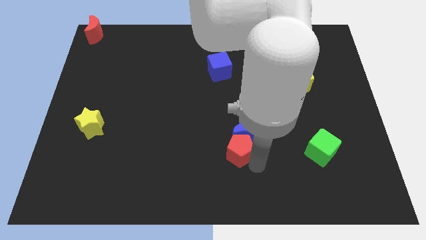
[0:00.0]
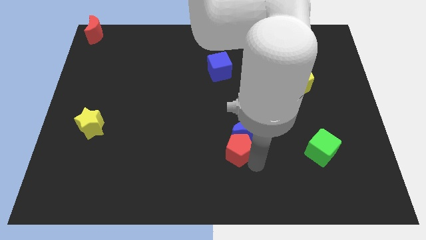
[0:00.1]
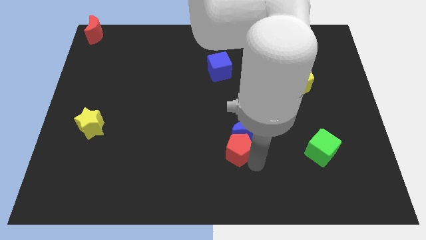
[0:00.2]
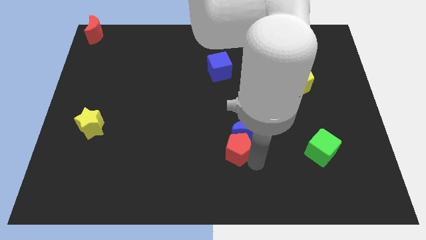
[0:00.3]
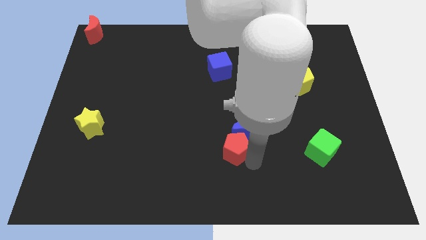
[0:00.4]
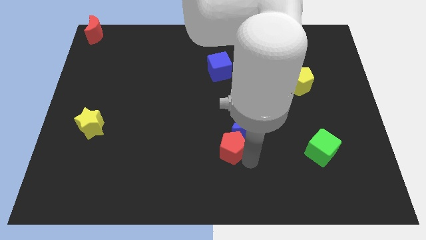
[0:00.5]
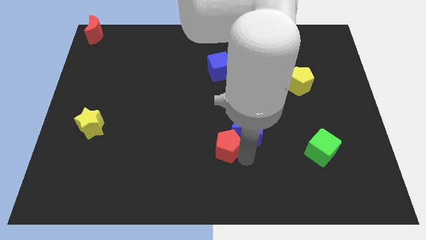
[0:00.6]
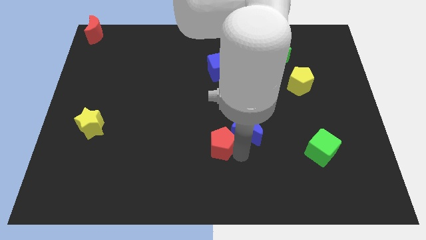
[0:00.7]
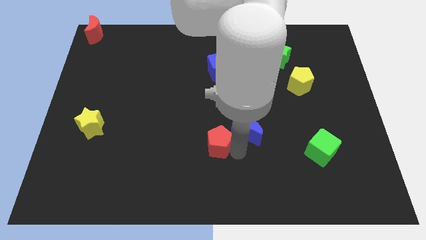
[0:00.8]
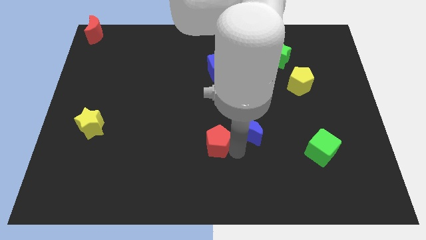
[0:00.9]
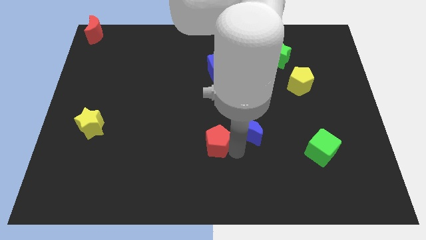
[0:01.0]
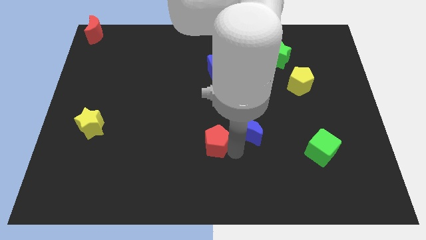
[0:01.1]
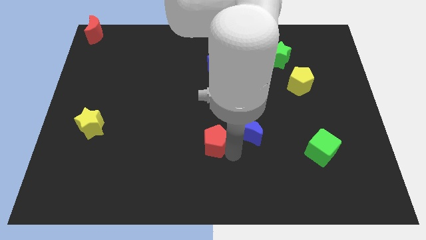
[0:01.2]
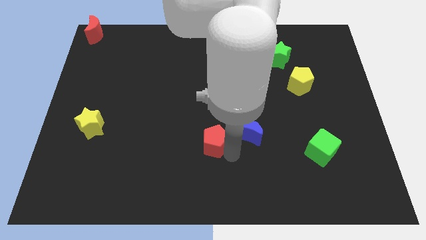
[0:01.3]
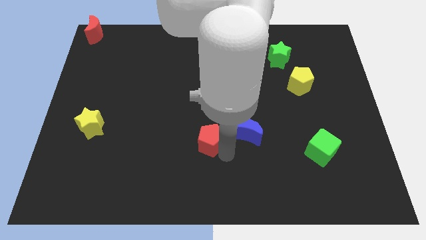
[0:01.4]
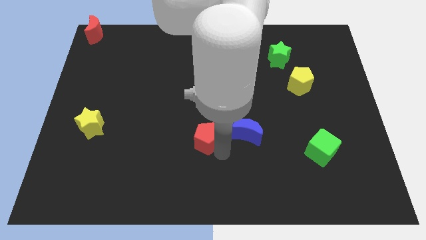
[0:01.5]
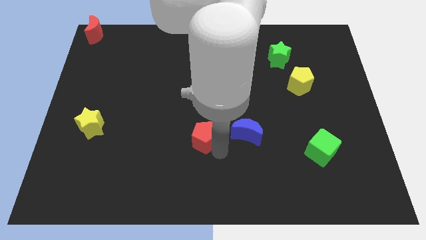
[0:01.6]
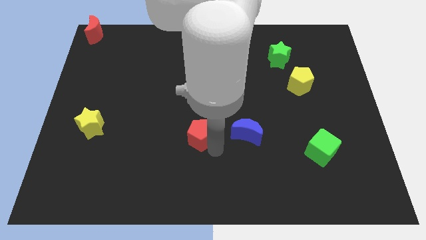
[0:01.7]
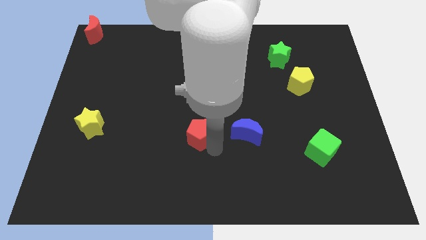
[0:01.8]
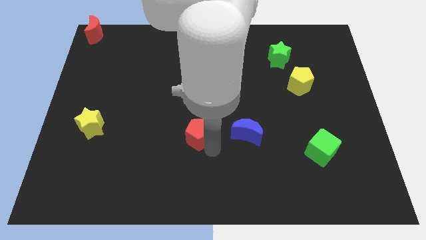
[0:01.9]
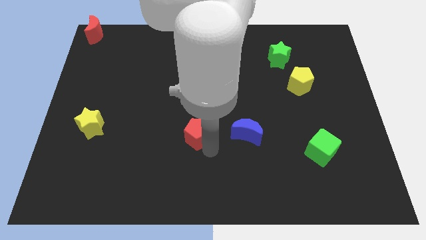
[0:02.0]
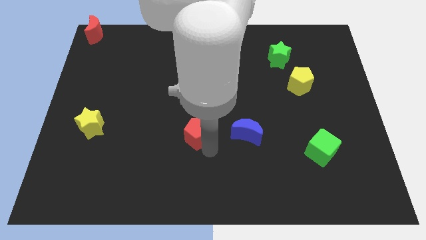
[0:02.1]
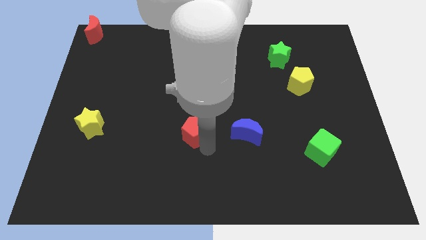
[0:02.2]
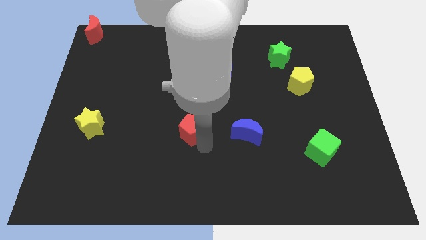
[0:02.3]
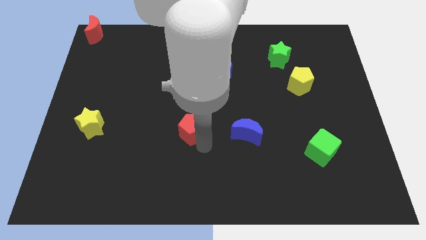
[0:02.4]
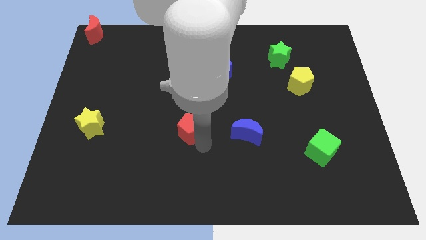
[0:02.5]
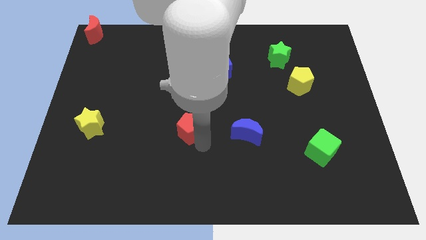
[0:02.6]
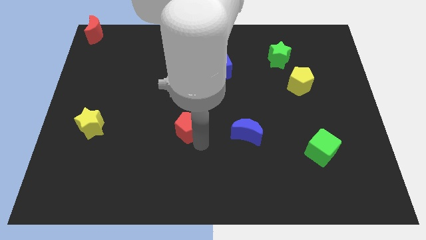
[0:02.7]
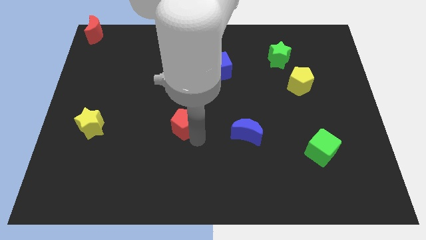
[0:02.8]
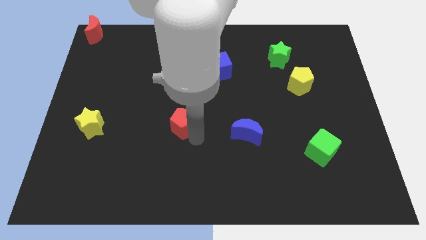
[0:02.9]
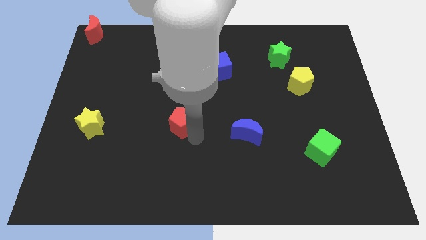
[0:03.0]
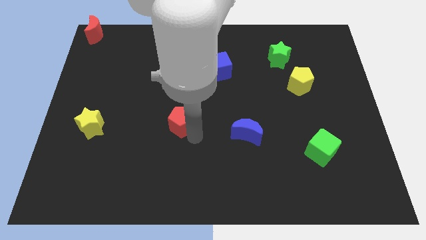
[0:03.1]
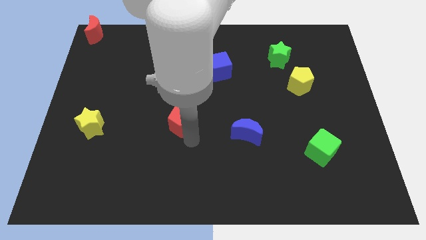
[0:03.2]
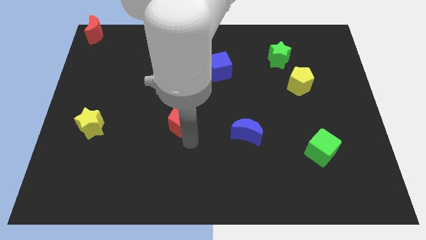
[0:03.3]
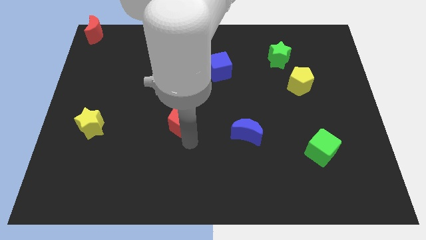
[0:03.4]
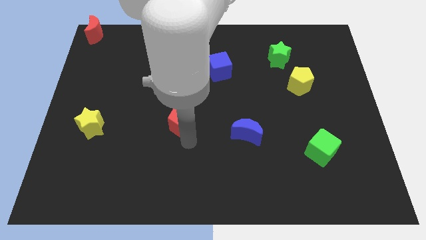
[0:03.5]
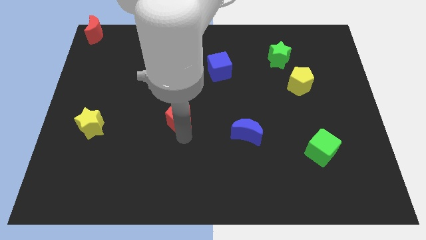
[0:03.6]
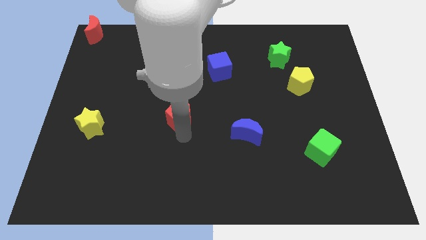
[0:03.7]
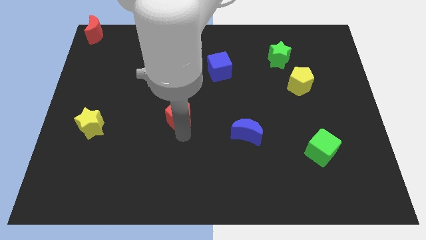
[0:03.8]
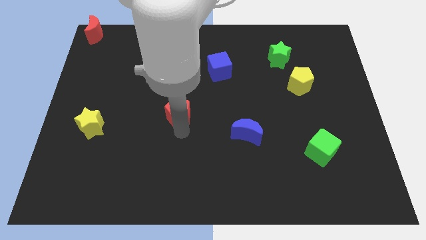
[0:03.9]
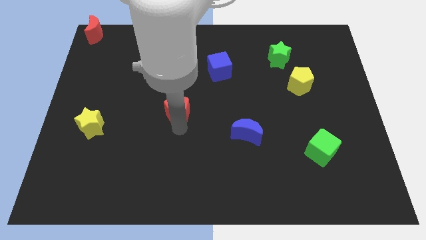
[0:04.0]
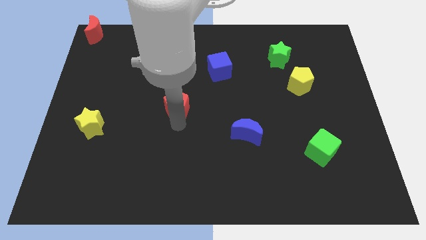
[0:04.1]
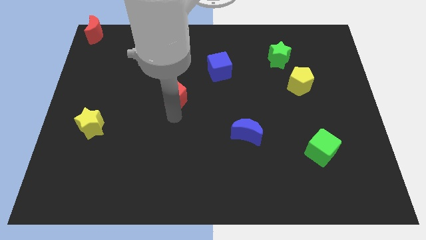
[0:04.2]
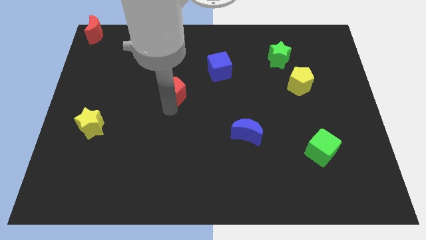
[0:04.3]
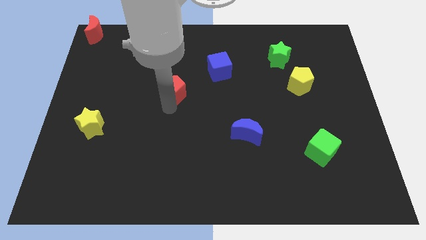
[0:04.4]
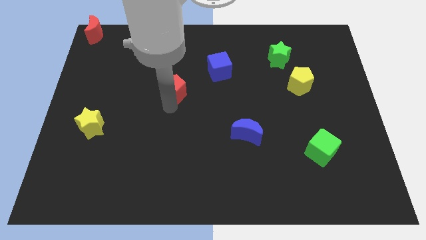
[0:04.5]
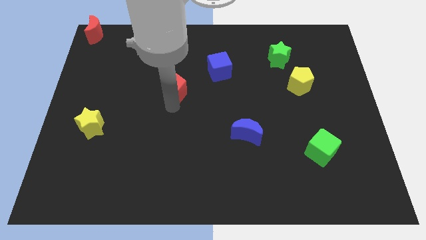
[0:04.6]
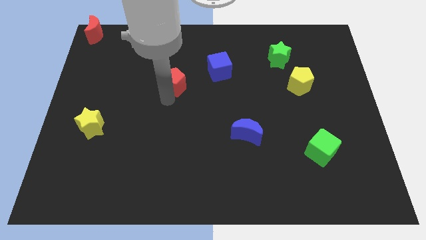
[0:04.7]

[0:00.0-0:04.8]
separate the red pentagon from blue moon

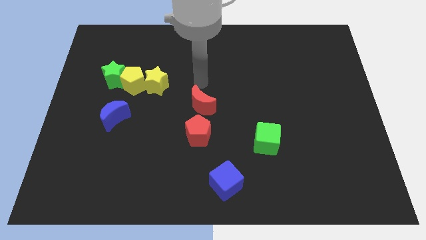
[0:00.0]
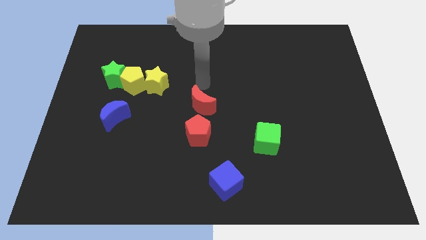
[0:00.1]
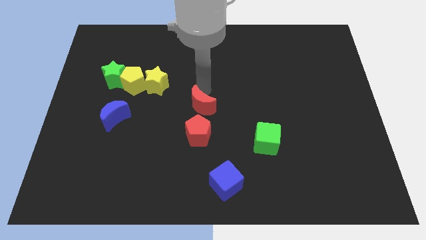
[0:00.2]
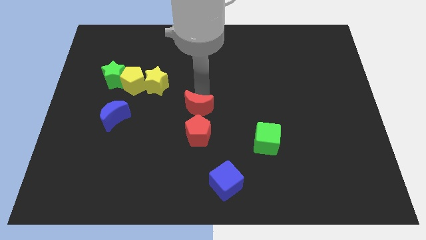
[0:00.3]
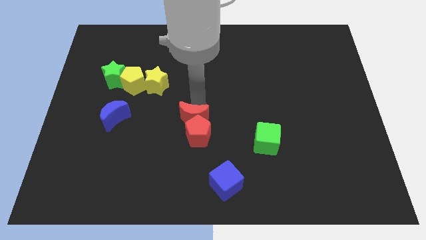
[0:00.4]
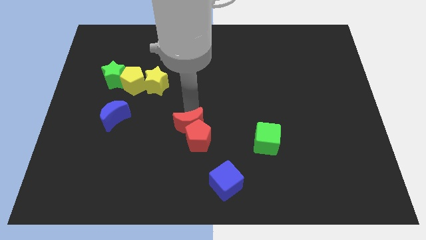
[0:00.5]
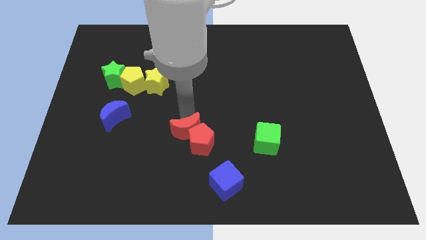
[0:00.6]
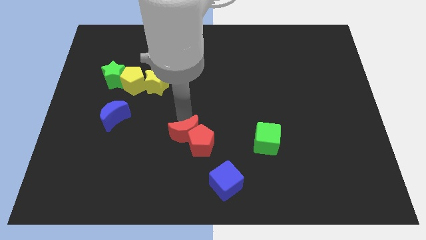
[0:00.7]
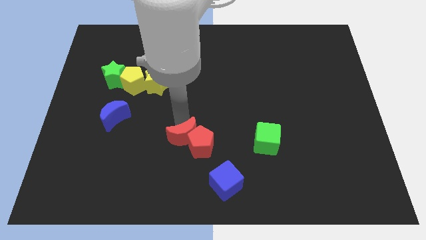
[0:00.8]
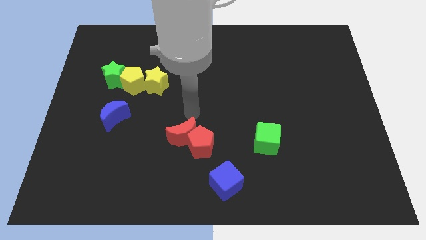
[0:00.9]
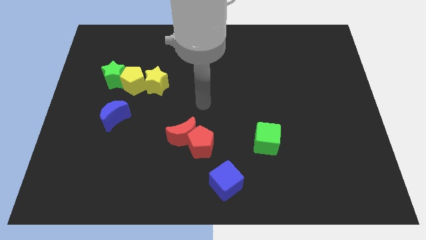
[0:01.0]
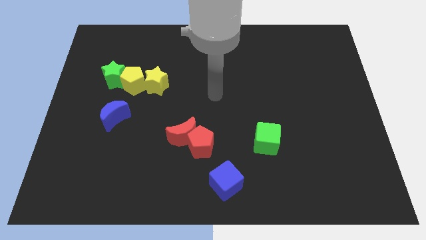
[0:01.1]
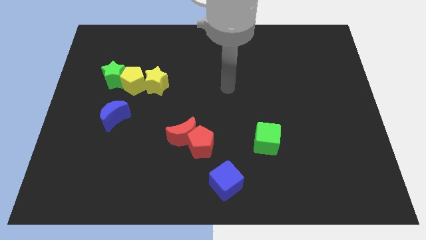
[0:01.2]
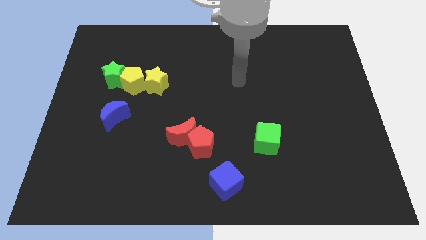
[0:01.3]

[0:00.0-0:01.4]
push the red crescent into the red pentagon

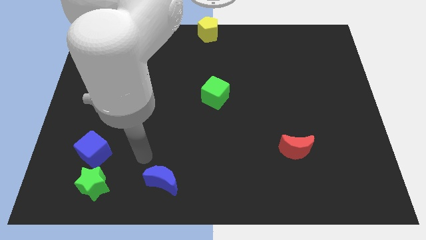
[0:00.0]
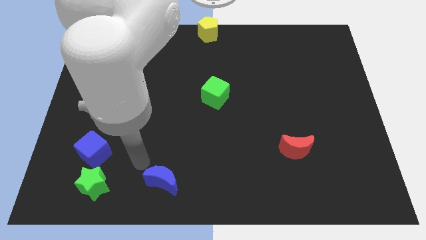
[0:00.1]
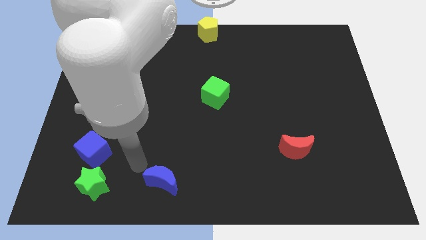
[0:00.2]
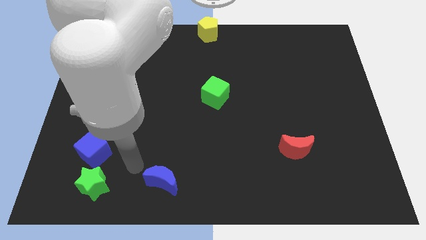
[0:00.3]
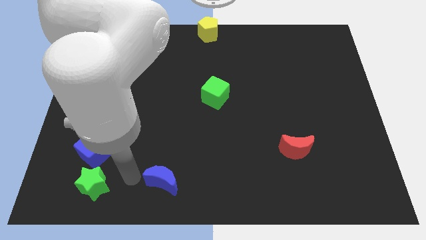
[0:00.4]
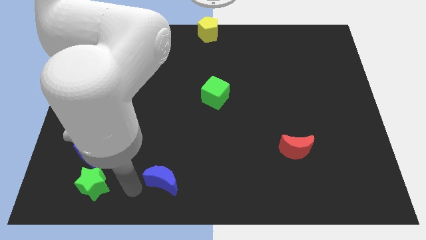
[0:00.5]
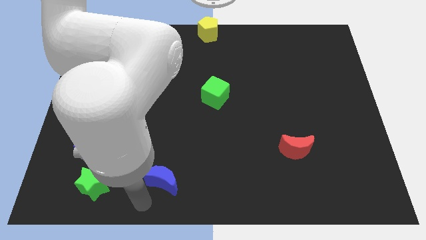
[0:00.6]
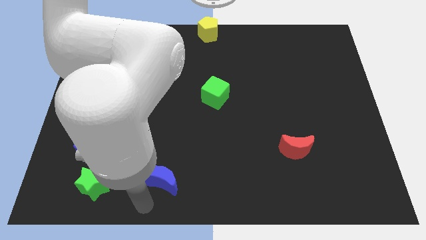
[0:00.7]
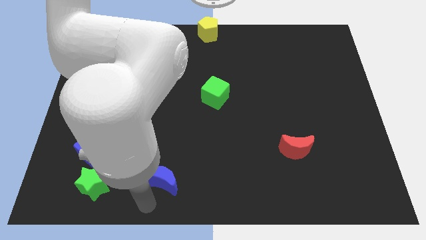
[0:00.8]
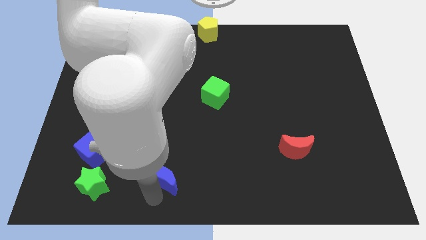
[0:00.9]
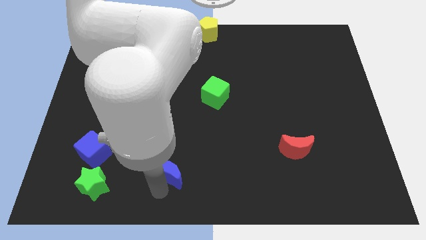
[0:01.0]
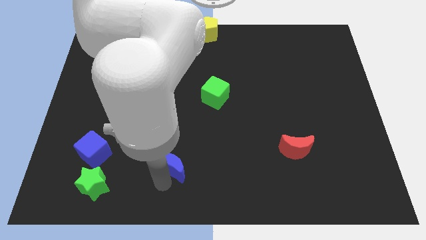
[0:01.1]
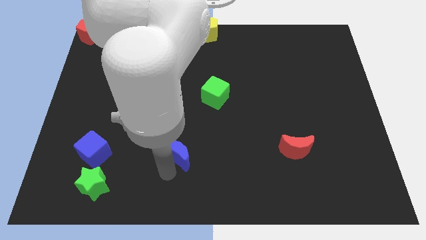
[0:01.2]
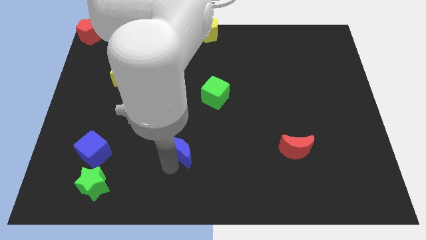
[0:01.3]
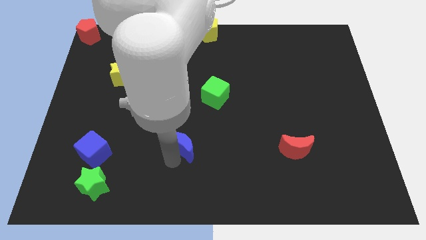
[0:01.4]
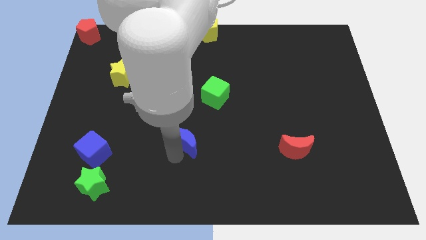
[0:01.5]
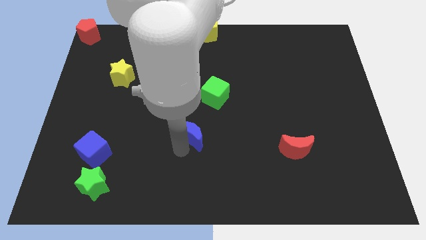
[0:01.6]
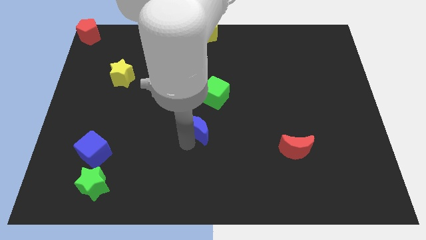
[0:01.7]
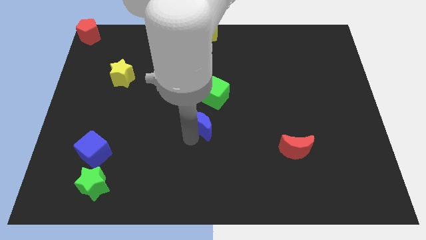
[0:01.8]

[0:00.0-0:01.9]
push the blue moon upward

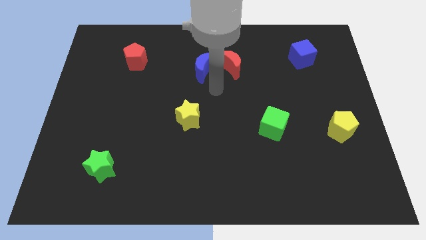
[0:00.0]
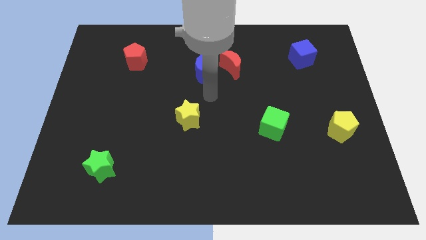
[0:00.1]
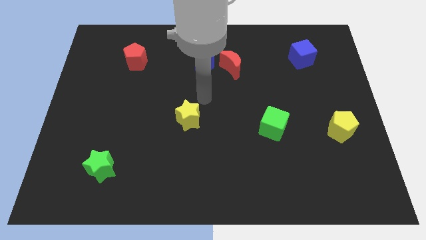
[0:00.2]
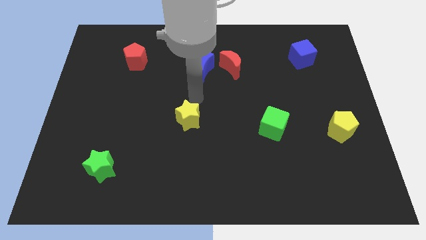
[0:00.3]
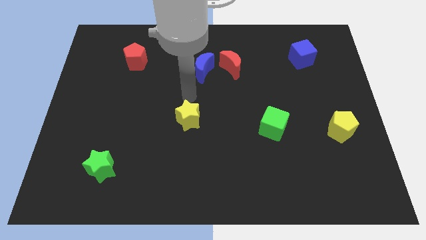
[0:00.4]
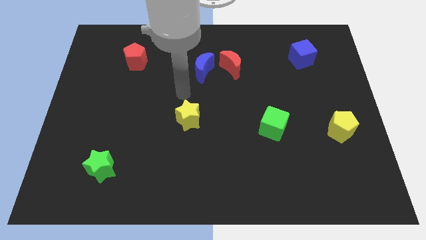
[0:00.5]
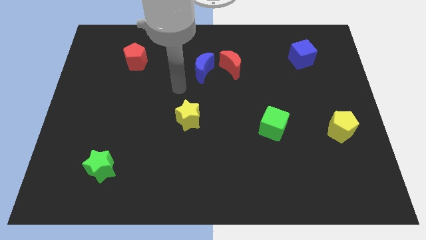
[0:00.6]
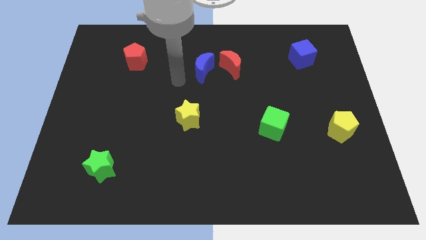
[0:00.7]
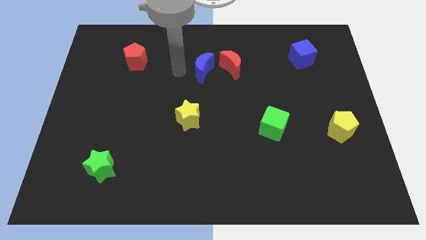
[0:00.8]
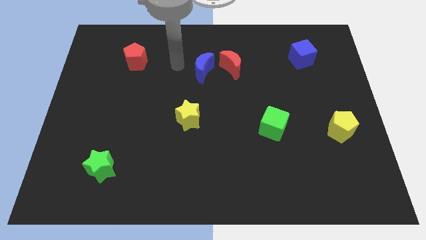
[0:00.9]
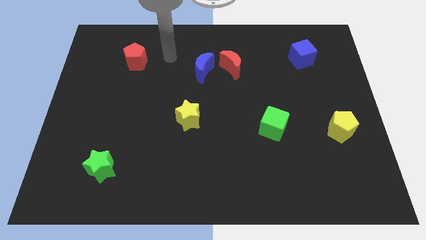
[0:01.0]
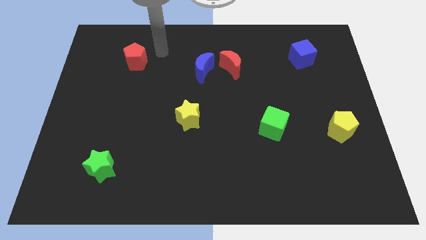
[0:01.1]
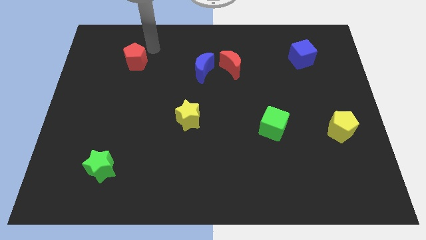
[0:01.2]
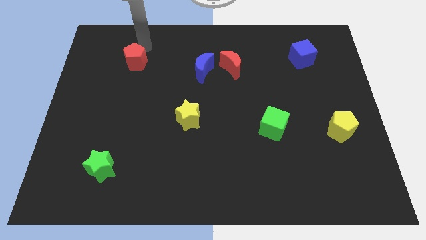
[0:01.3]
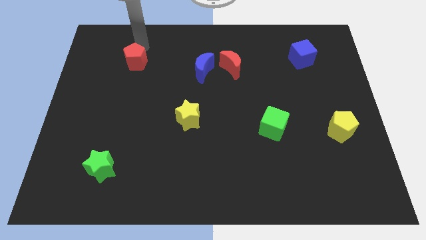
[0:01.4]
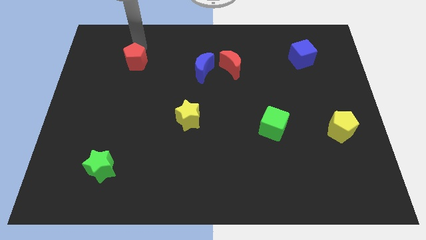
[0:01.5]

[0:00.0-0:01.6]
put your arm above the red pentagon
